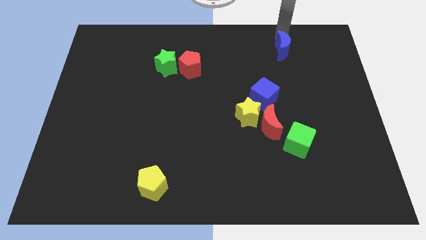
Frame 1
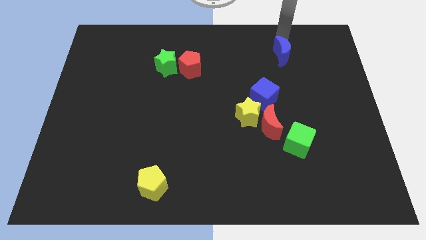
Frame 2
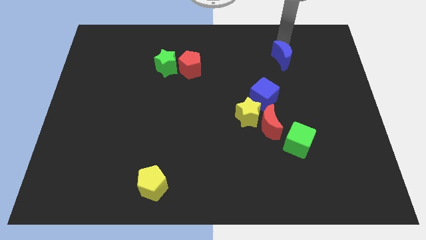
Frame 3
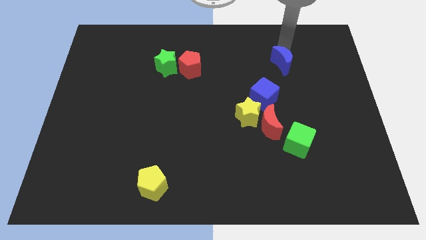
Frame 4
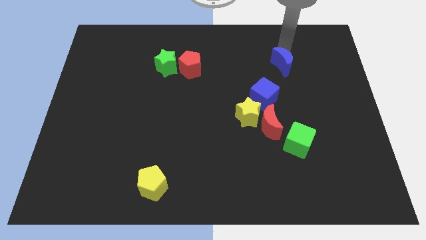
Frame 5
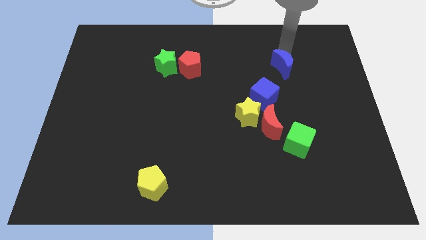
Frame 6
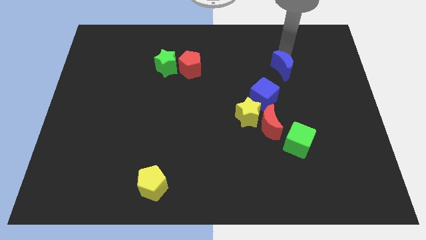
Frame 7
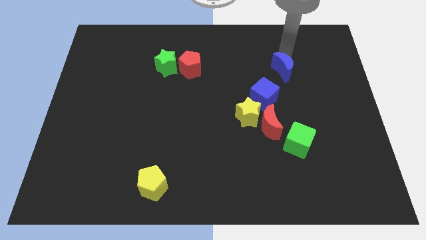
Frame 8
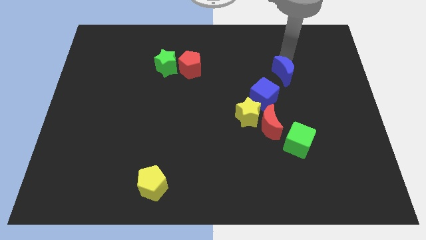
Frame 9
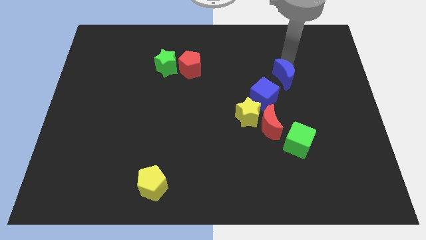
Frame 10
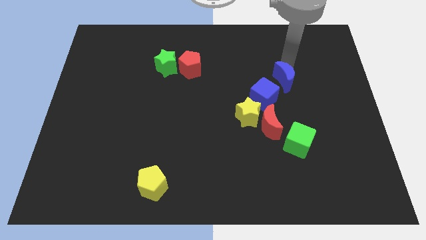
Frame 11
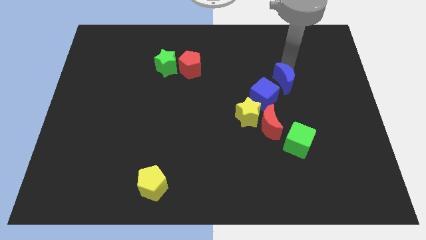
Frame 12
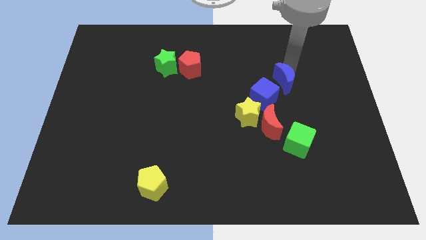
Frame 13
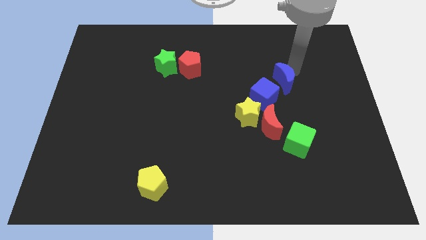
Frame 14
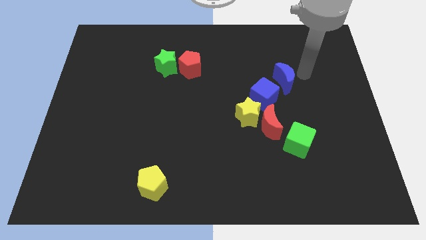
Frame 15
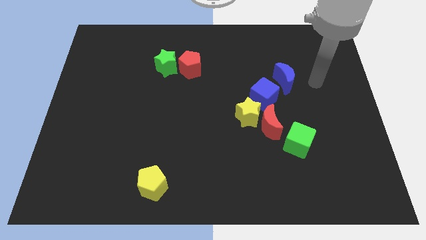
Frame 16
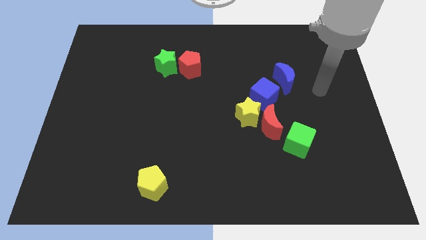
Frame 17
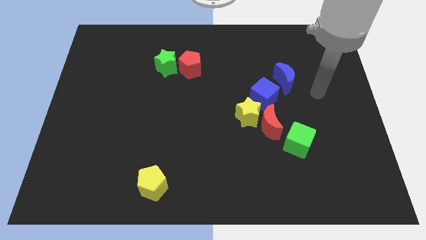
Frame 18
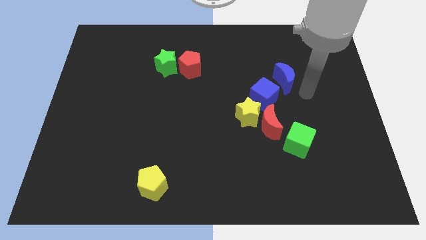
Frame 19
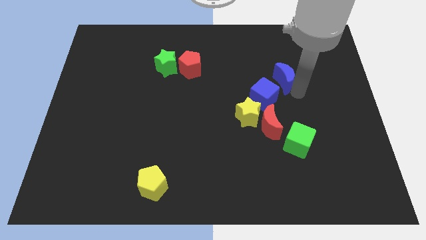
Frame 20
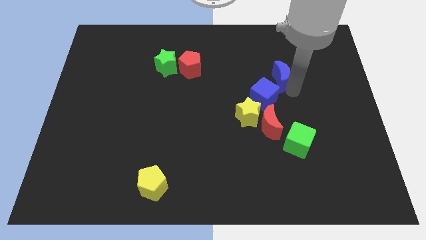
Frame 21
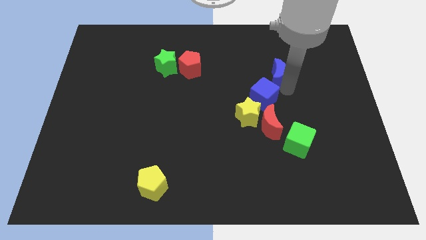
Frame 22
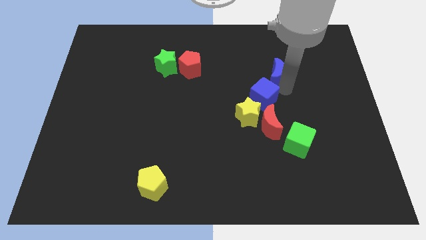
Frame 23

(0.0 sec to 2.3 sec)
place the blue crescent to the top of blue cube

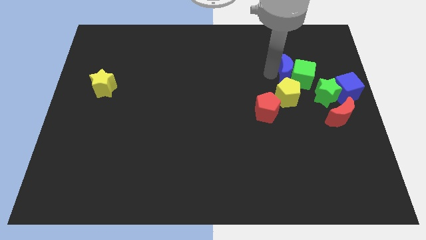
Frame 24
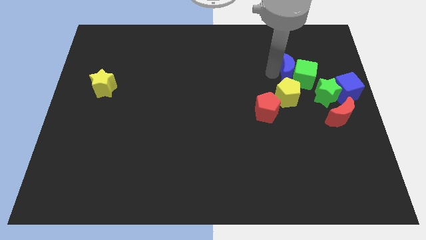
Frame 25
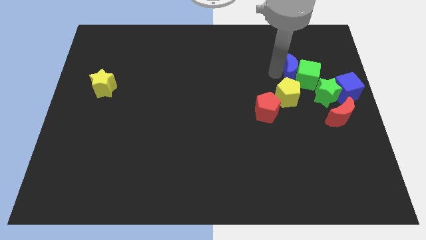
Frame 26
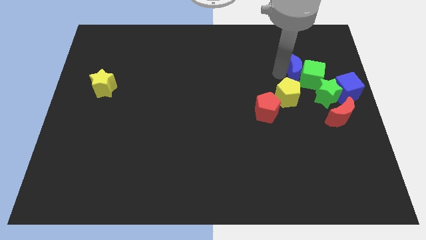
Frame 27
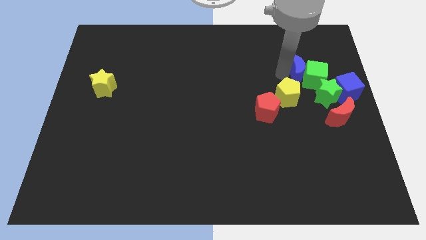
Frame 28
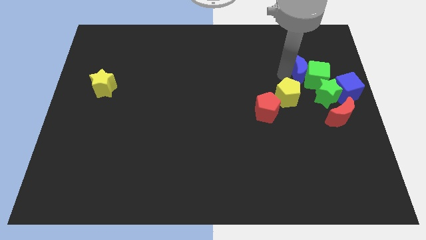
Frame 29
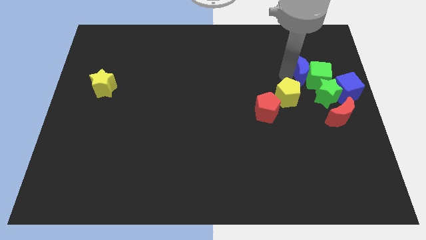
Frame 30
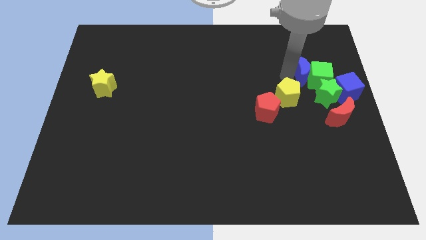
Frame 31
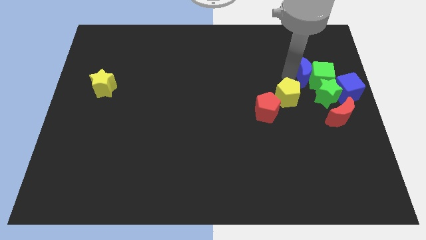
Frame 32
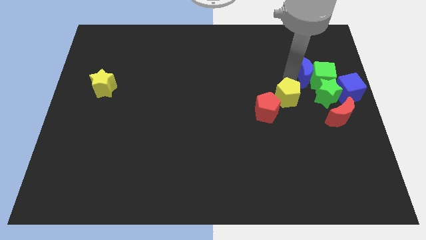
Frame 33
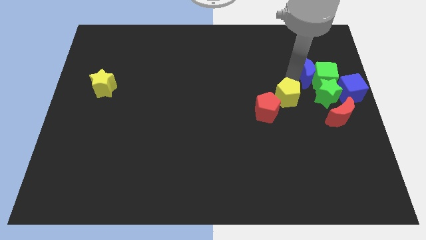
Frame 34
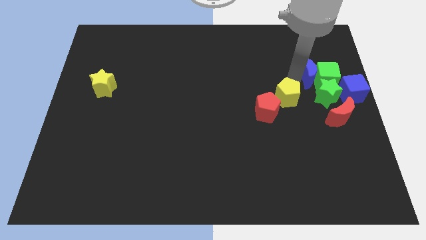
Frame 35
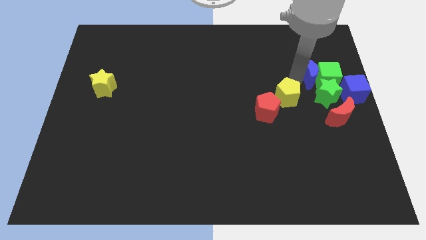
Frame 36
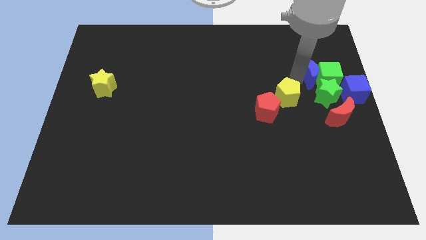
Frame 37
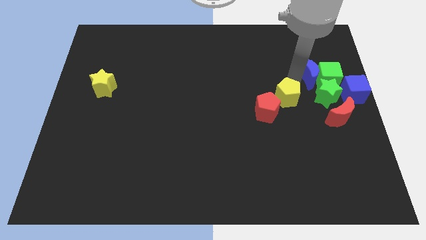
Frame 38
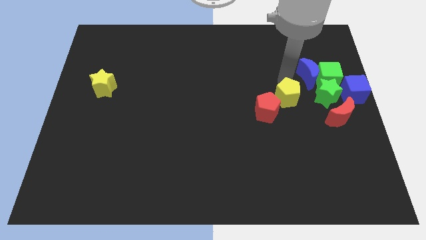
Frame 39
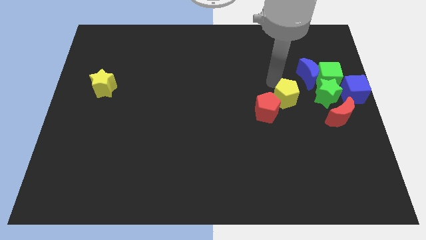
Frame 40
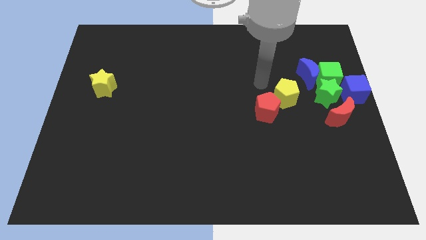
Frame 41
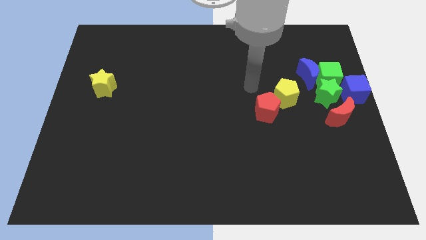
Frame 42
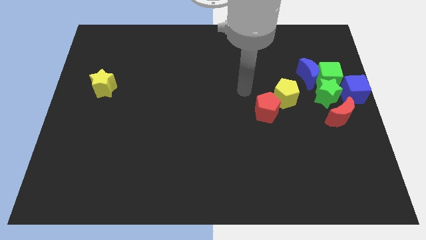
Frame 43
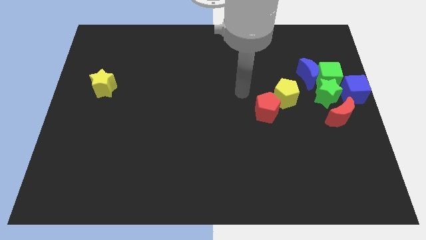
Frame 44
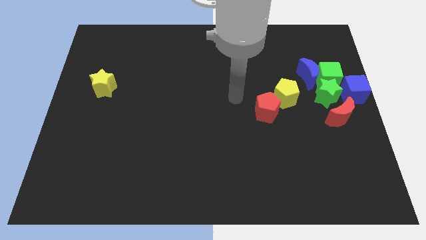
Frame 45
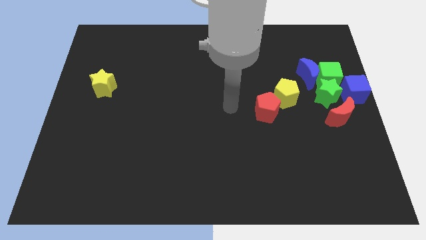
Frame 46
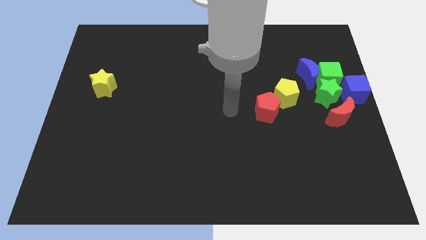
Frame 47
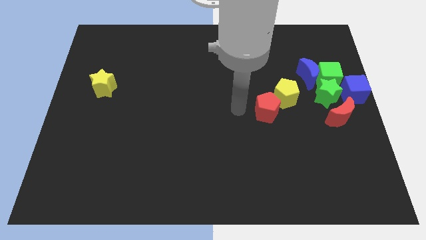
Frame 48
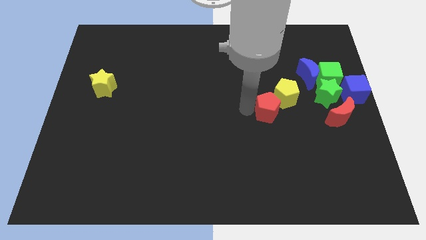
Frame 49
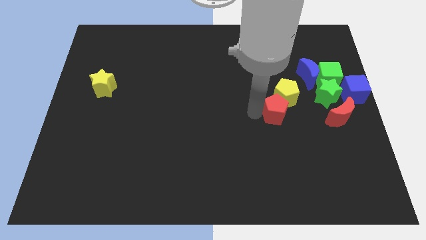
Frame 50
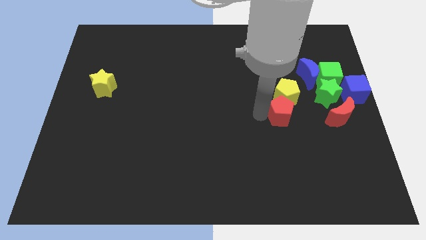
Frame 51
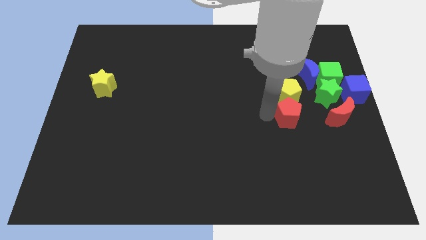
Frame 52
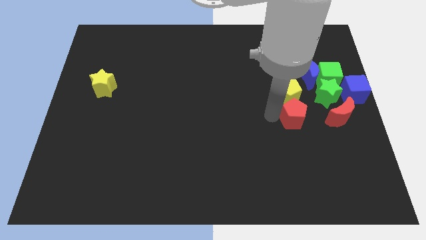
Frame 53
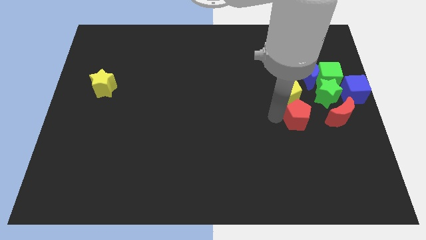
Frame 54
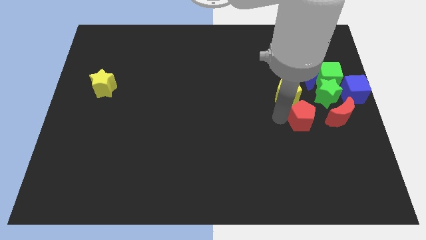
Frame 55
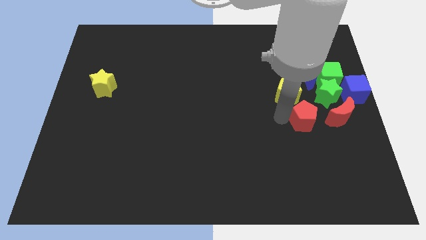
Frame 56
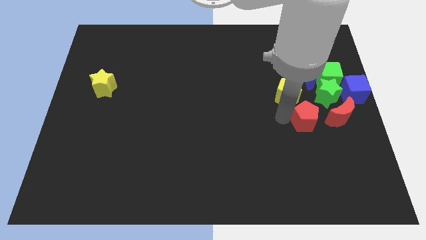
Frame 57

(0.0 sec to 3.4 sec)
push the red pentagon close to the red moon

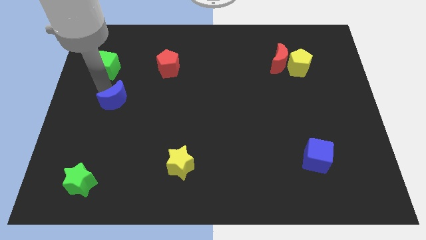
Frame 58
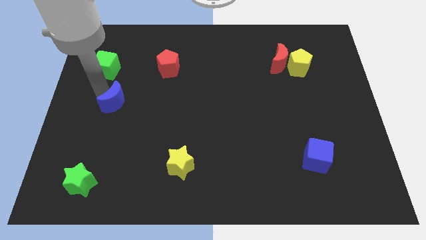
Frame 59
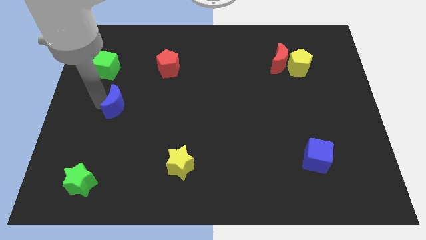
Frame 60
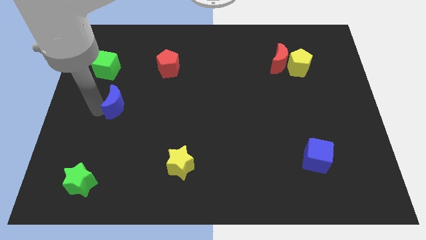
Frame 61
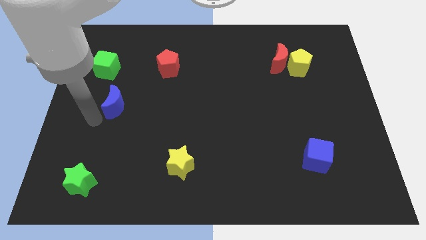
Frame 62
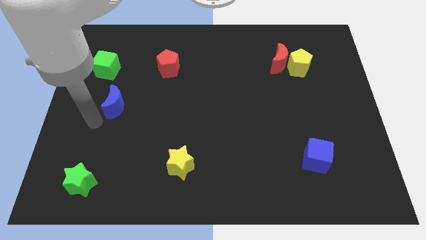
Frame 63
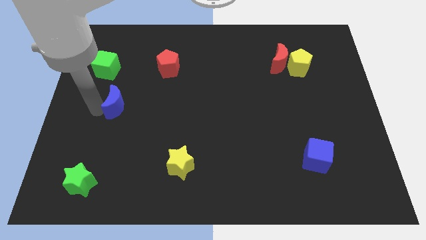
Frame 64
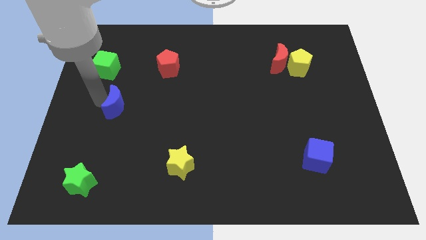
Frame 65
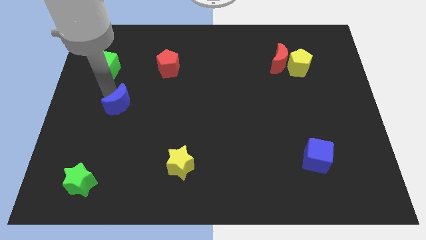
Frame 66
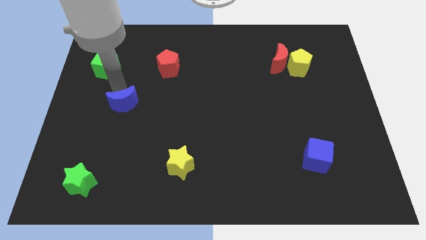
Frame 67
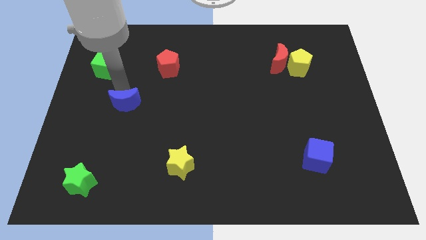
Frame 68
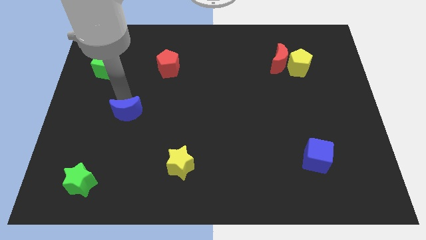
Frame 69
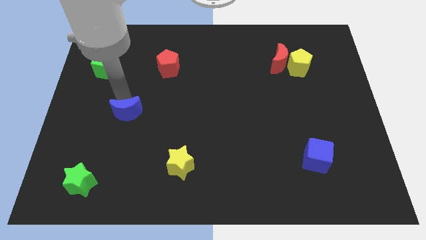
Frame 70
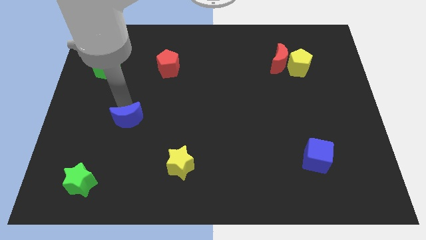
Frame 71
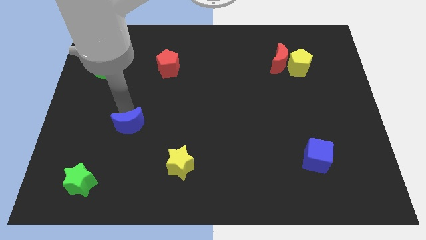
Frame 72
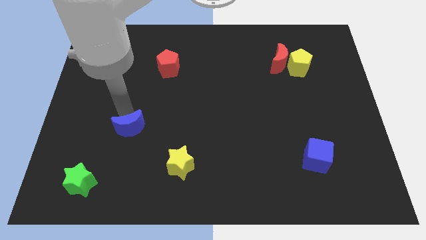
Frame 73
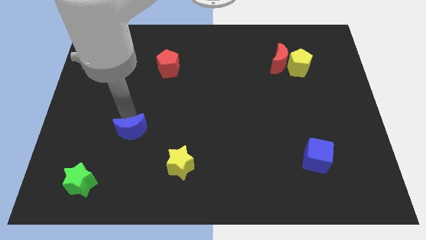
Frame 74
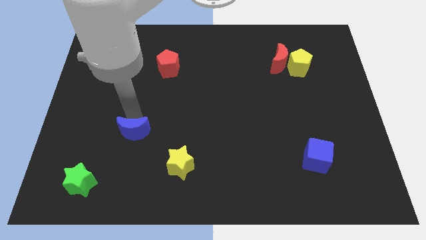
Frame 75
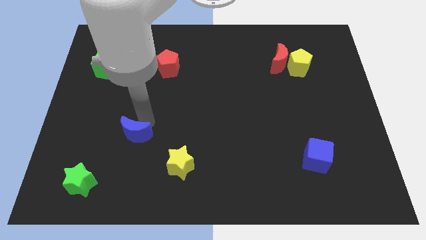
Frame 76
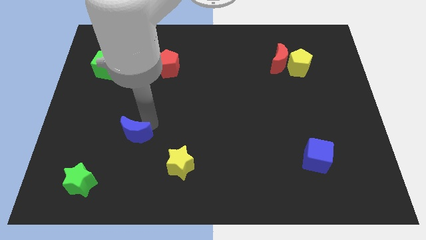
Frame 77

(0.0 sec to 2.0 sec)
move the blue moon slightly to the bottom

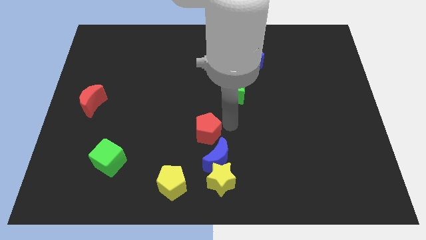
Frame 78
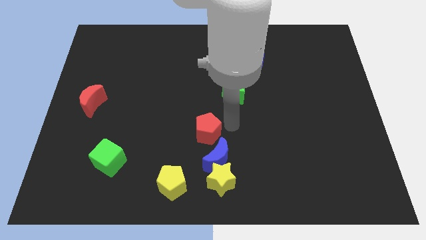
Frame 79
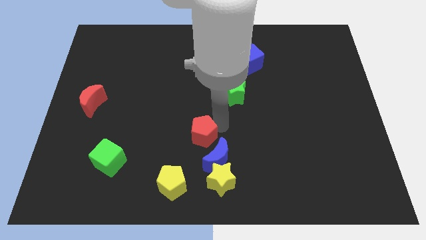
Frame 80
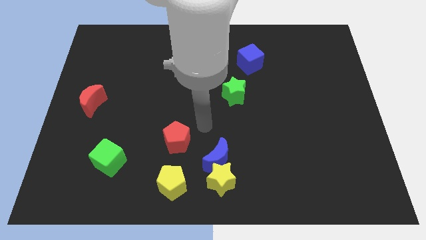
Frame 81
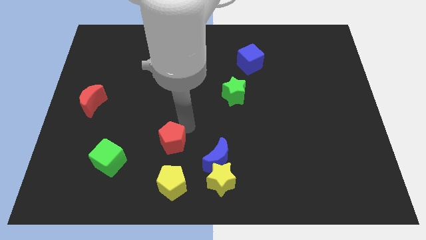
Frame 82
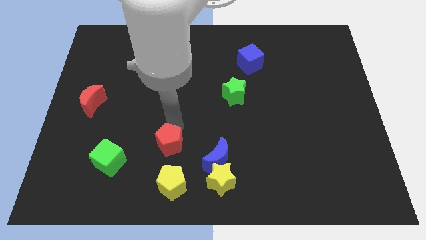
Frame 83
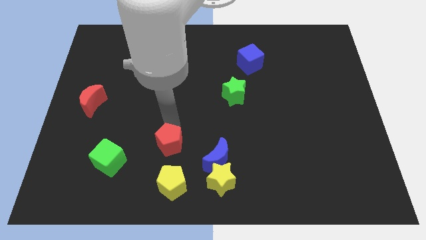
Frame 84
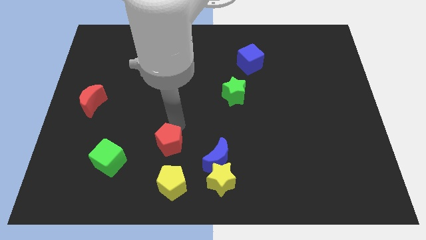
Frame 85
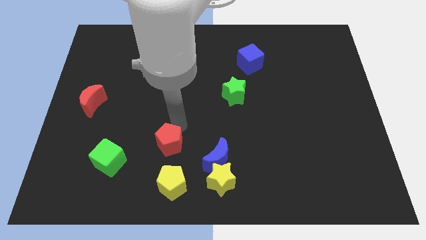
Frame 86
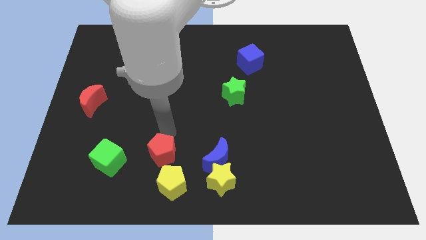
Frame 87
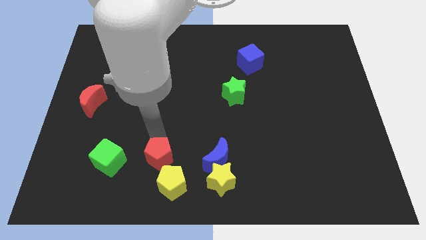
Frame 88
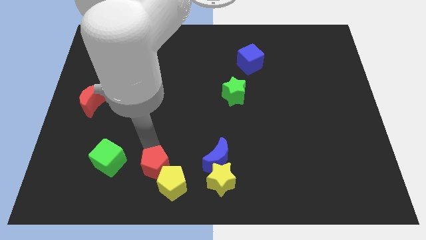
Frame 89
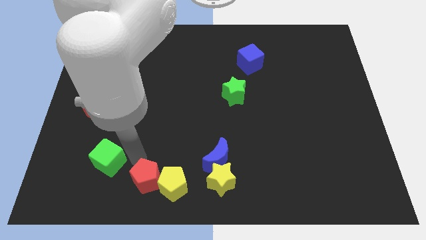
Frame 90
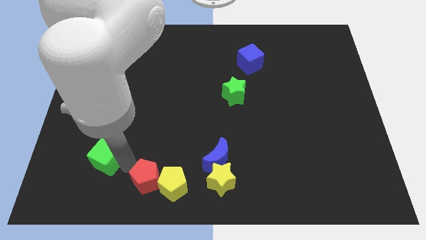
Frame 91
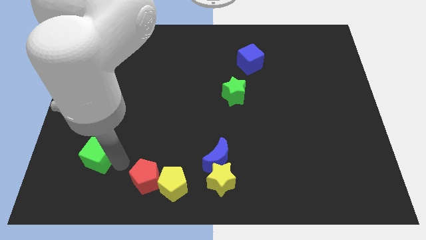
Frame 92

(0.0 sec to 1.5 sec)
push the red pentagon slightly towards bottom side
